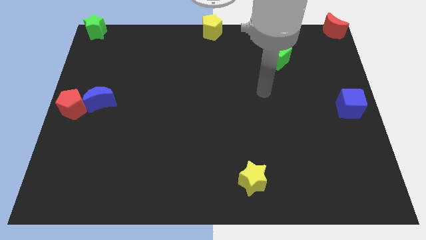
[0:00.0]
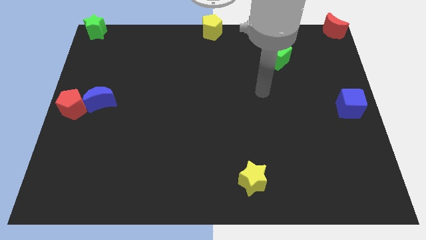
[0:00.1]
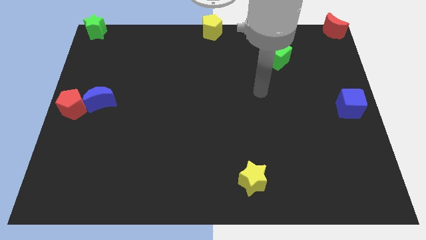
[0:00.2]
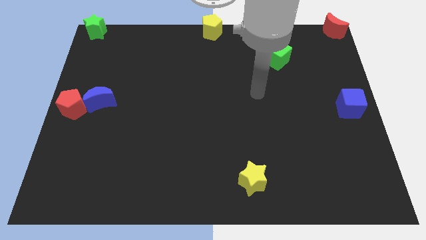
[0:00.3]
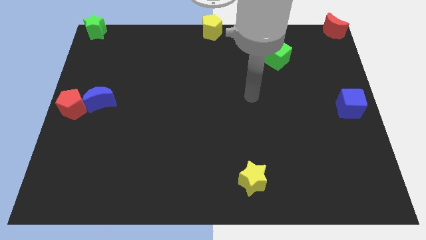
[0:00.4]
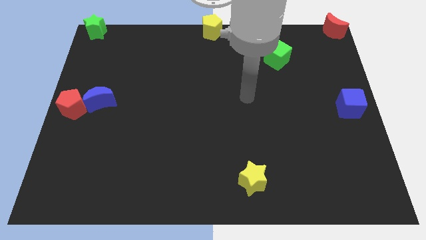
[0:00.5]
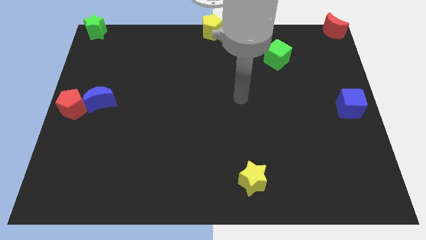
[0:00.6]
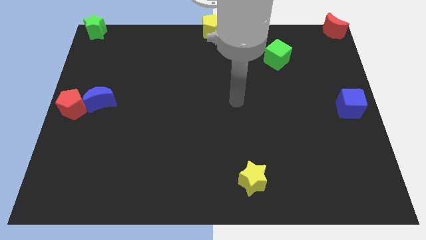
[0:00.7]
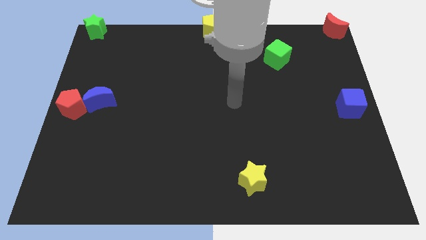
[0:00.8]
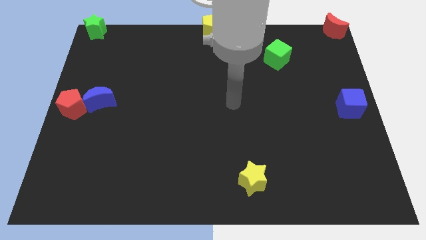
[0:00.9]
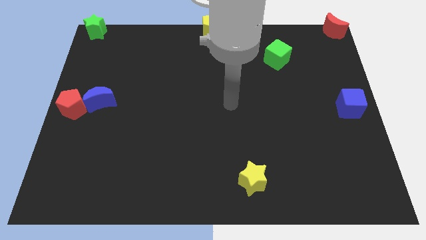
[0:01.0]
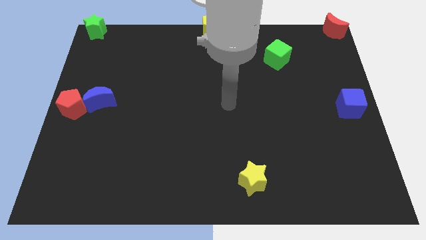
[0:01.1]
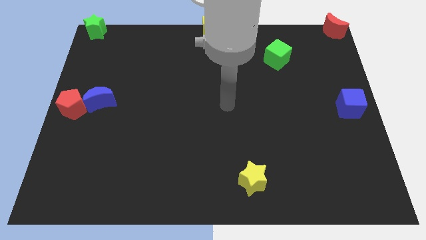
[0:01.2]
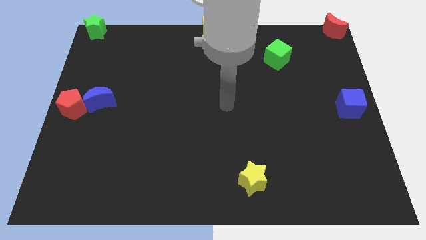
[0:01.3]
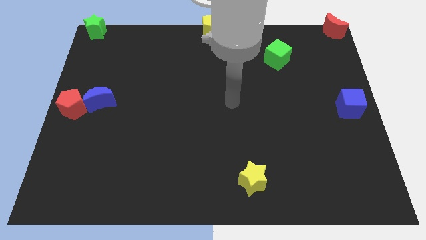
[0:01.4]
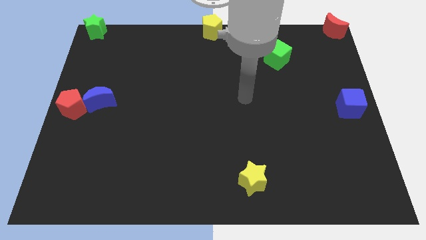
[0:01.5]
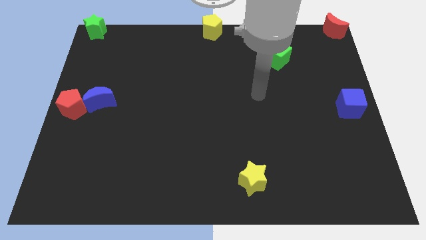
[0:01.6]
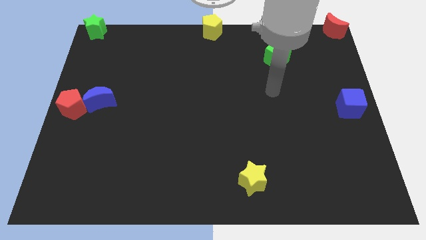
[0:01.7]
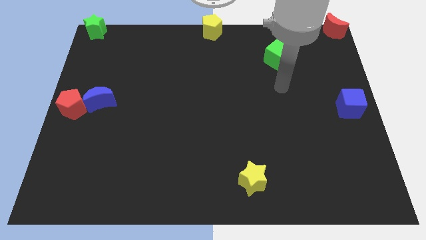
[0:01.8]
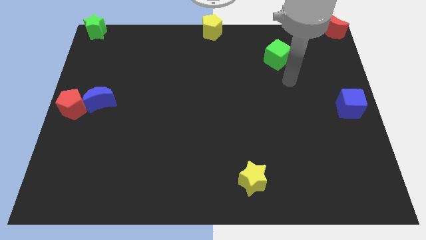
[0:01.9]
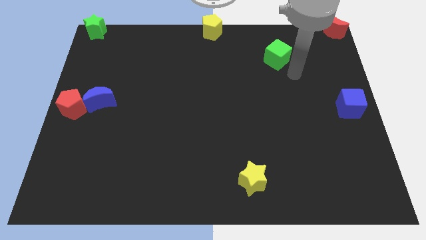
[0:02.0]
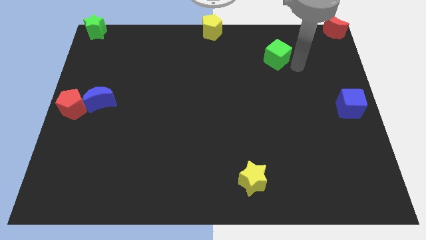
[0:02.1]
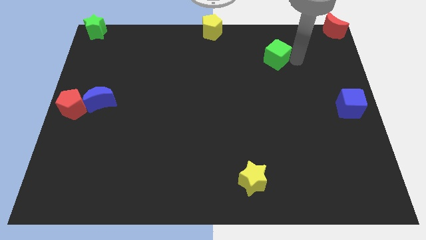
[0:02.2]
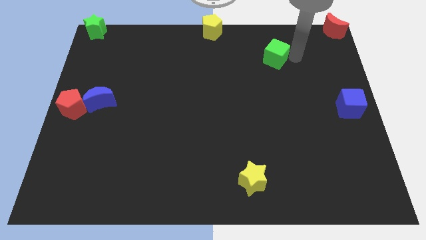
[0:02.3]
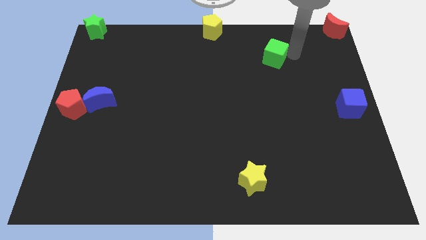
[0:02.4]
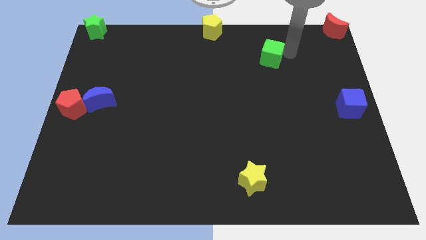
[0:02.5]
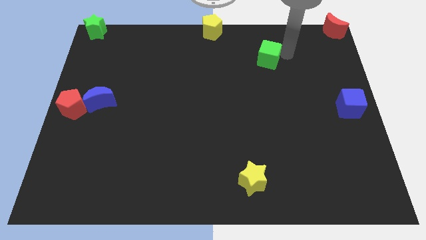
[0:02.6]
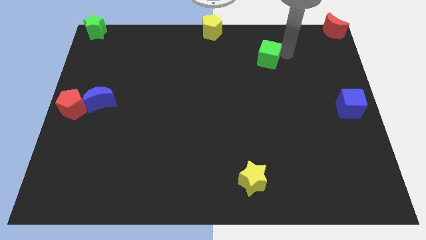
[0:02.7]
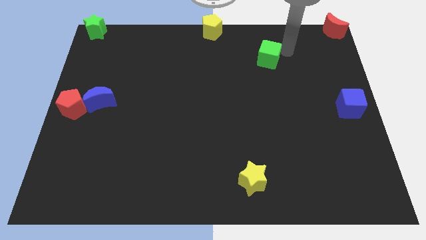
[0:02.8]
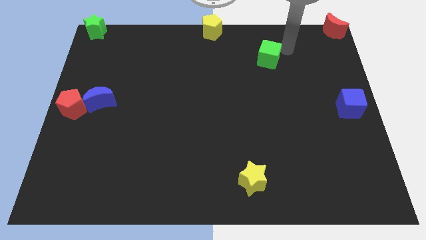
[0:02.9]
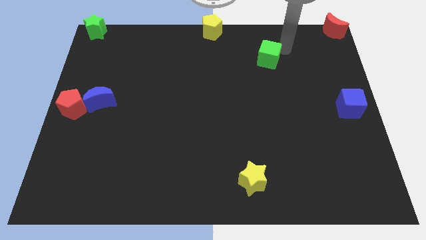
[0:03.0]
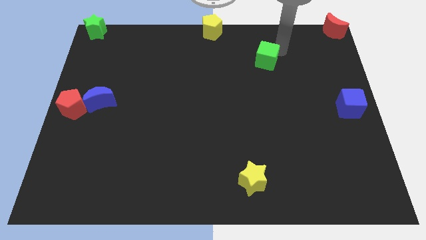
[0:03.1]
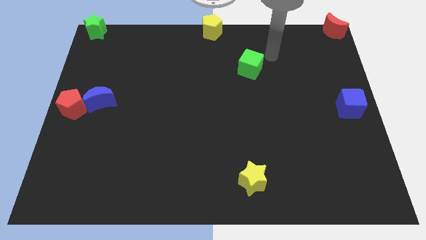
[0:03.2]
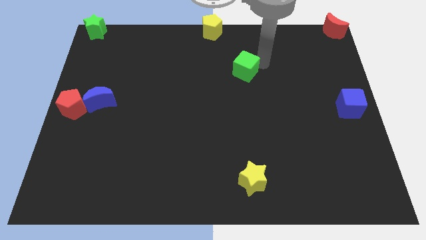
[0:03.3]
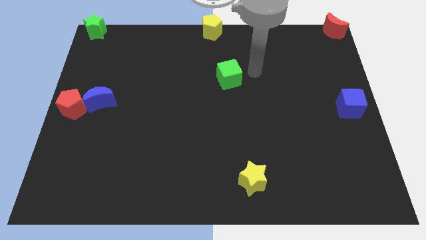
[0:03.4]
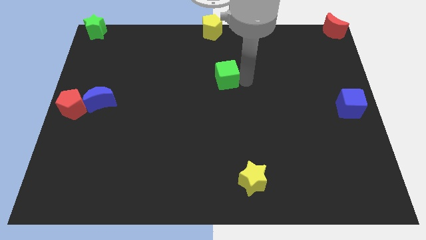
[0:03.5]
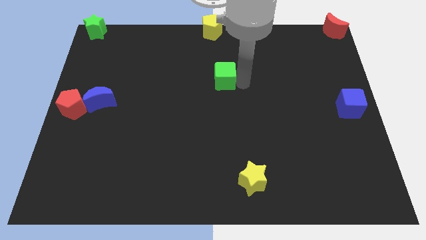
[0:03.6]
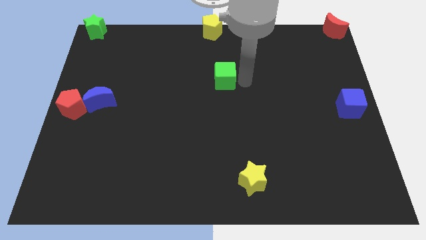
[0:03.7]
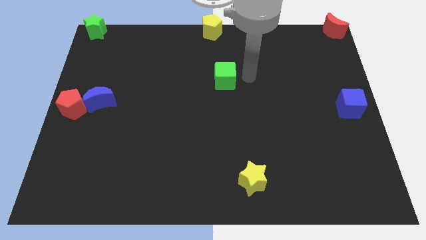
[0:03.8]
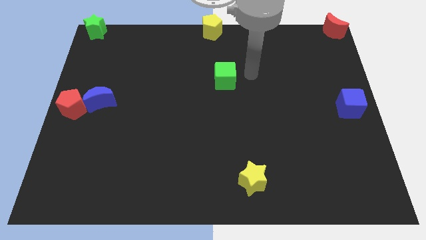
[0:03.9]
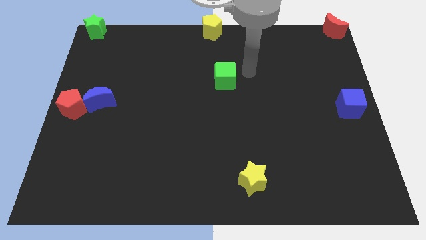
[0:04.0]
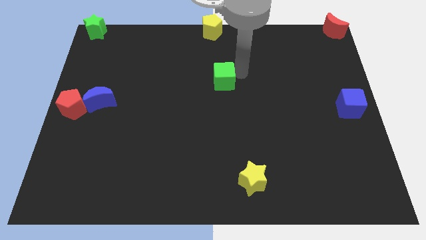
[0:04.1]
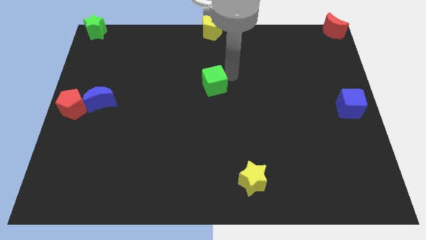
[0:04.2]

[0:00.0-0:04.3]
push green cube below yellow pentagon

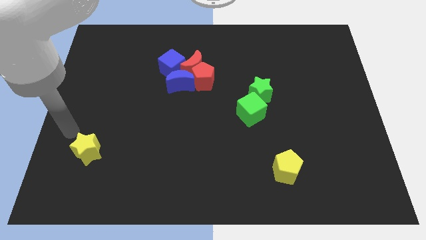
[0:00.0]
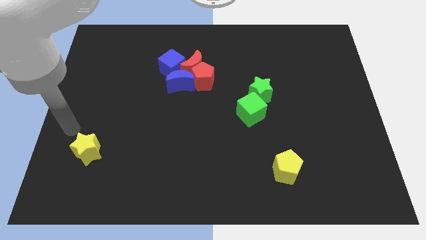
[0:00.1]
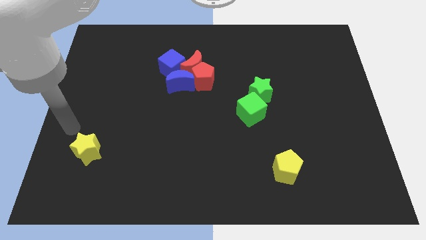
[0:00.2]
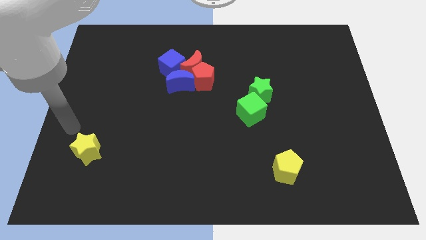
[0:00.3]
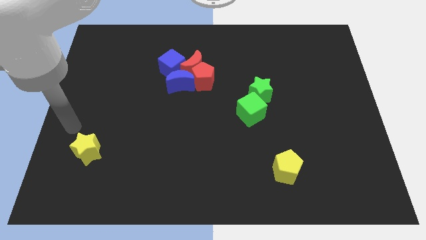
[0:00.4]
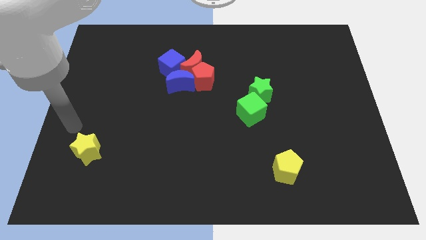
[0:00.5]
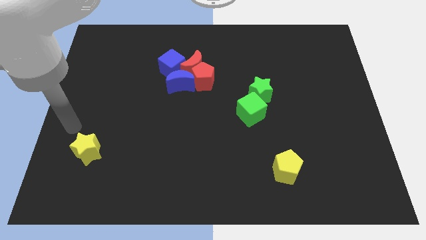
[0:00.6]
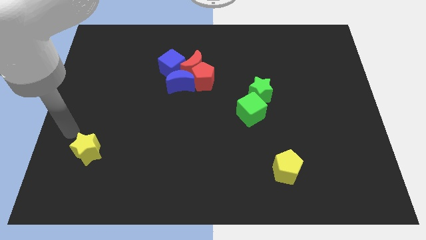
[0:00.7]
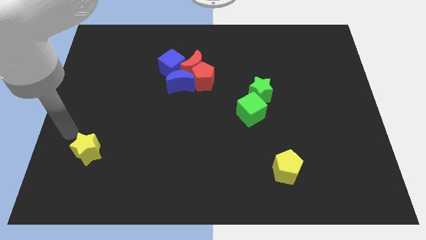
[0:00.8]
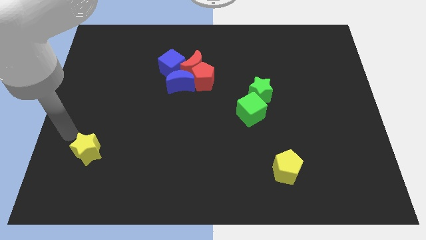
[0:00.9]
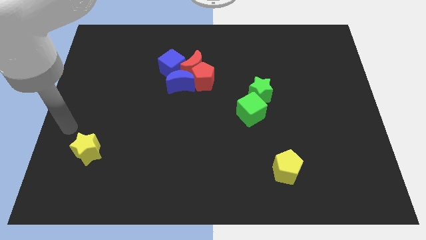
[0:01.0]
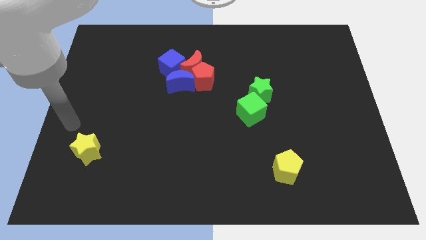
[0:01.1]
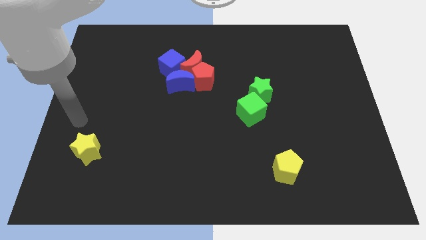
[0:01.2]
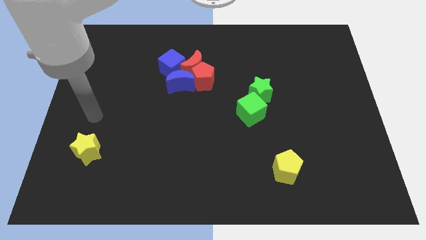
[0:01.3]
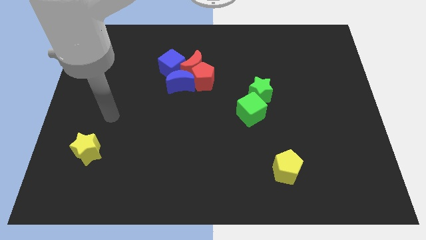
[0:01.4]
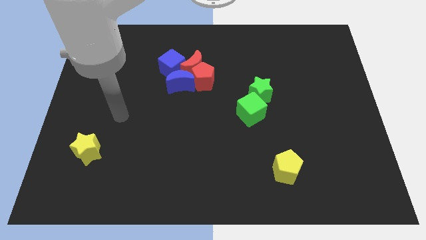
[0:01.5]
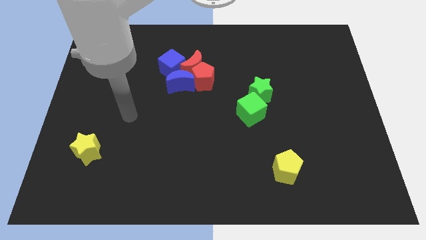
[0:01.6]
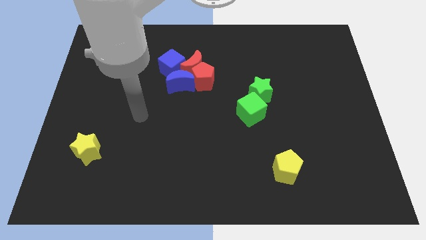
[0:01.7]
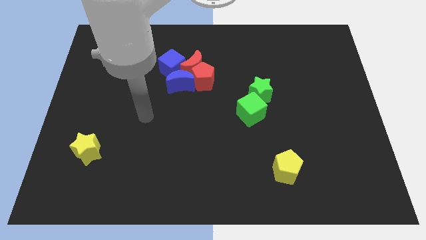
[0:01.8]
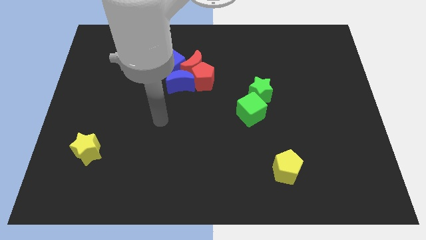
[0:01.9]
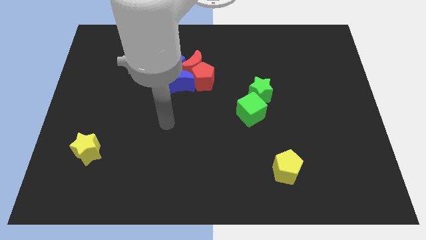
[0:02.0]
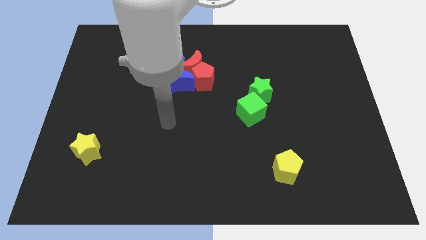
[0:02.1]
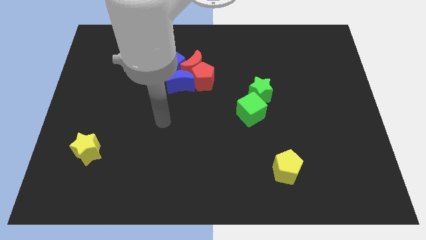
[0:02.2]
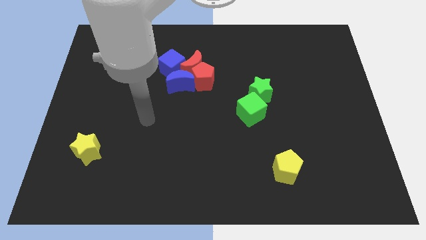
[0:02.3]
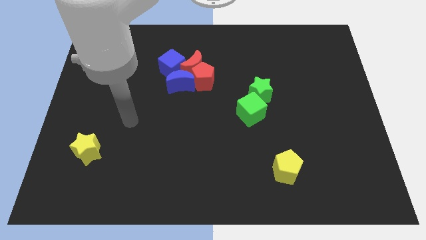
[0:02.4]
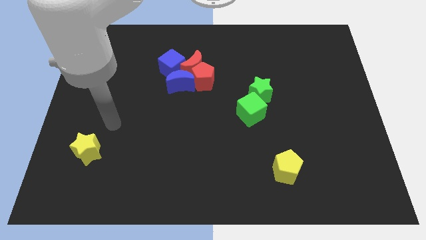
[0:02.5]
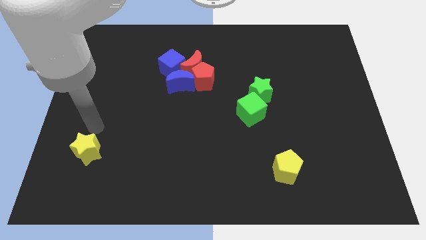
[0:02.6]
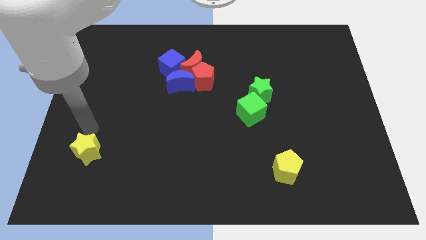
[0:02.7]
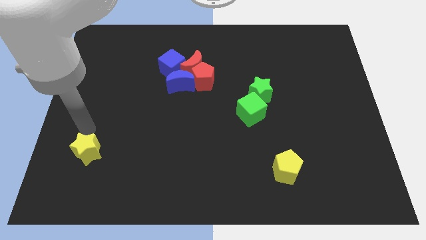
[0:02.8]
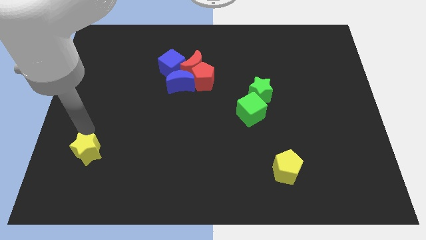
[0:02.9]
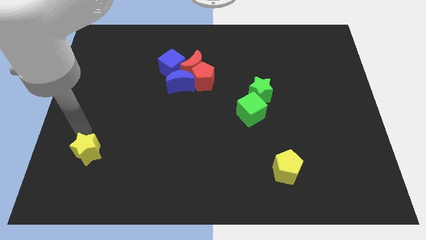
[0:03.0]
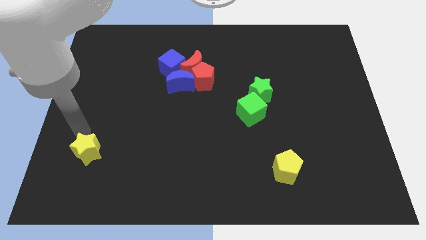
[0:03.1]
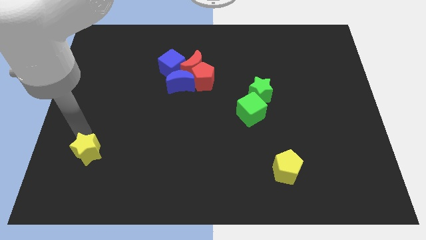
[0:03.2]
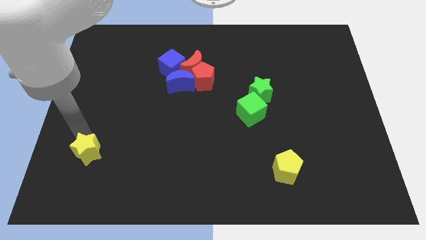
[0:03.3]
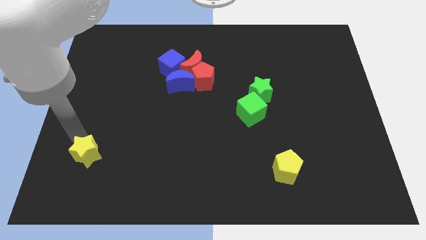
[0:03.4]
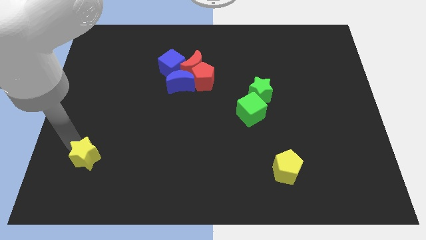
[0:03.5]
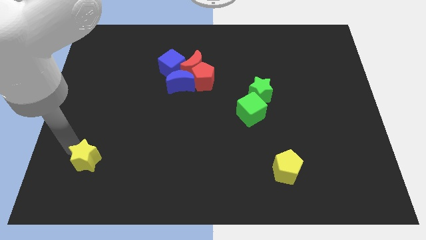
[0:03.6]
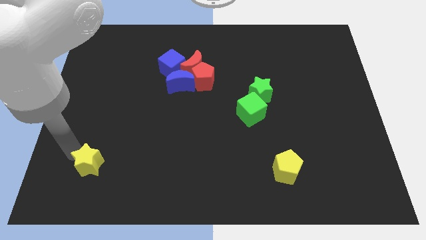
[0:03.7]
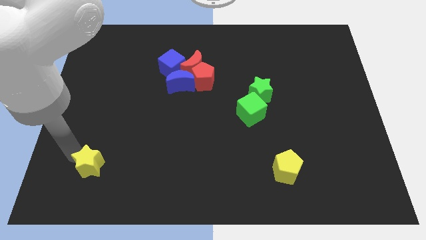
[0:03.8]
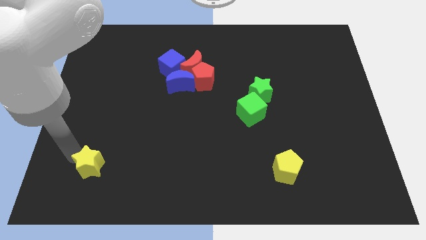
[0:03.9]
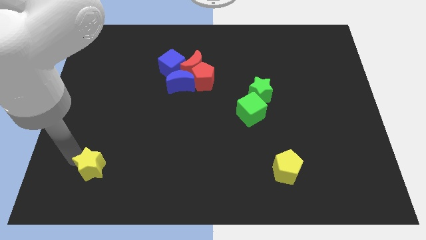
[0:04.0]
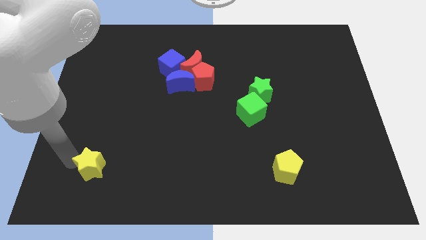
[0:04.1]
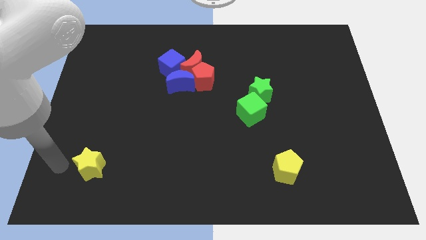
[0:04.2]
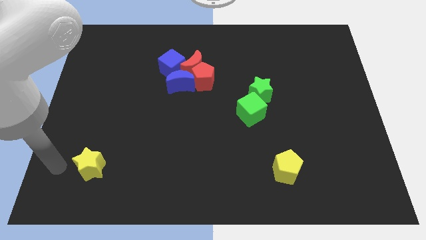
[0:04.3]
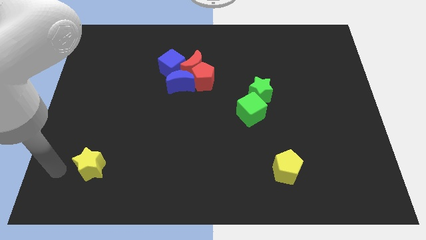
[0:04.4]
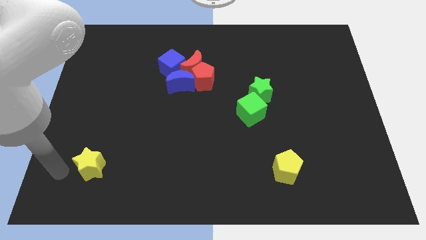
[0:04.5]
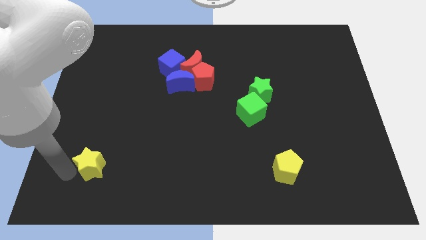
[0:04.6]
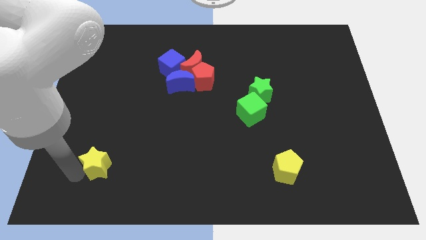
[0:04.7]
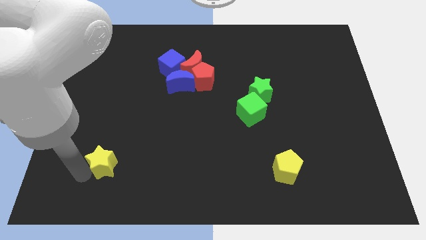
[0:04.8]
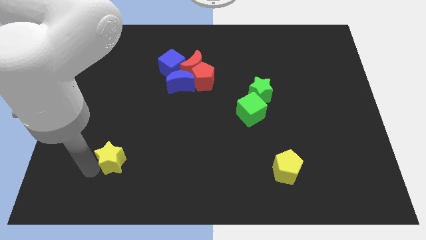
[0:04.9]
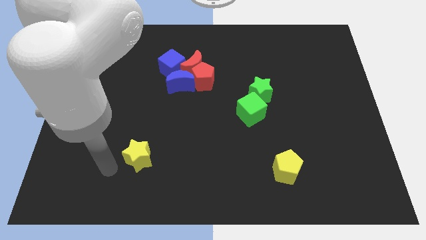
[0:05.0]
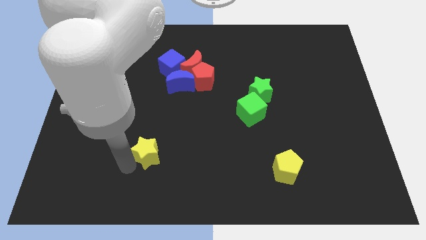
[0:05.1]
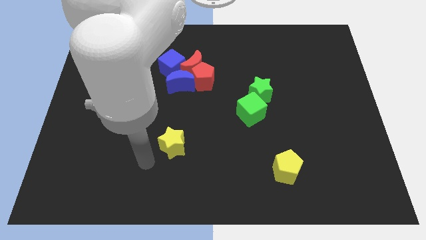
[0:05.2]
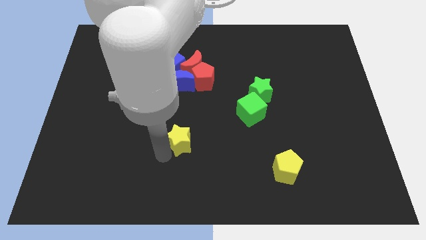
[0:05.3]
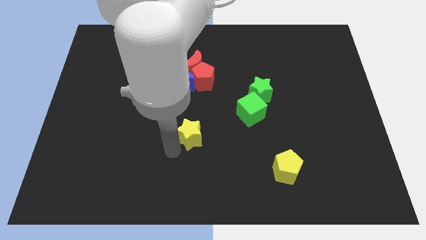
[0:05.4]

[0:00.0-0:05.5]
move the yellow star towards the left side of the green blocks
